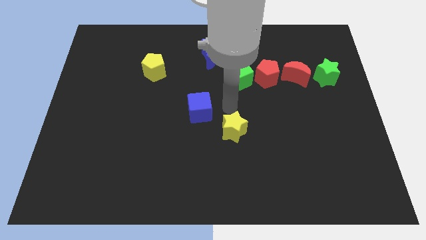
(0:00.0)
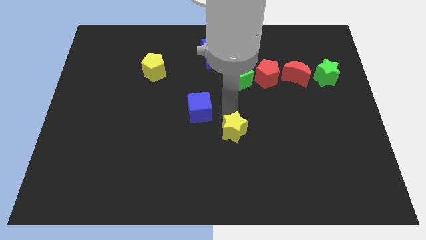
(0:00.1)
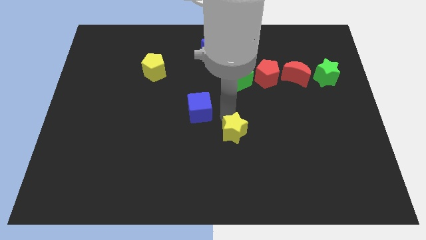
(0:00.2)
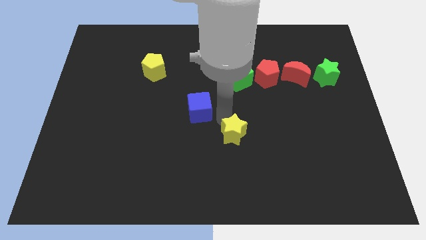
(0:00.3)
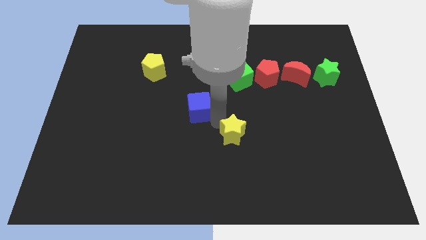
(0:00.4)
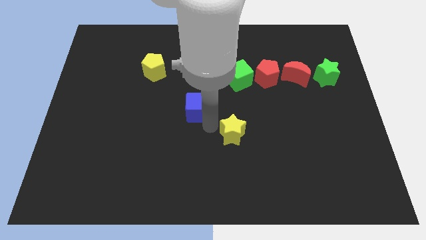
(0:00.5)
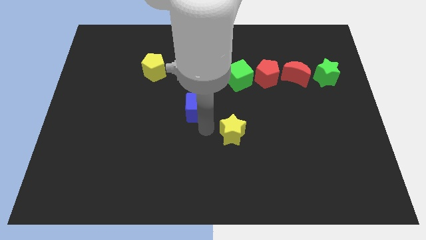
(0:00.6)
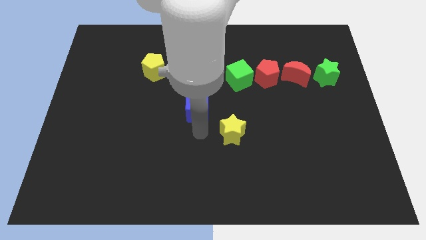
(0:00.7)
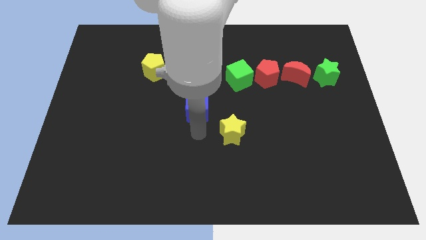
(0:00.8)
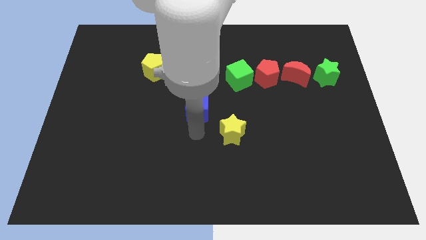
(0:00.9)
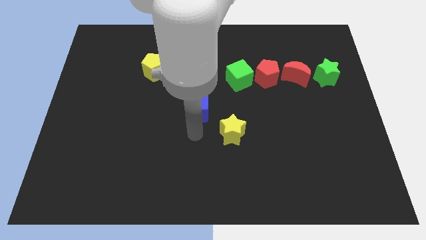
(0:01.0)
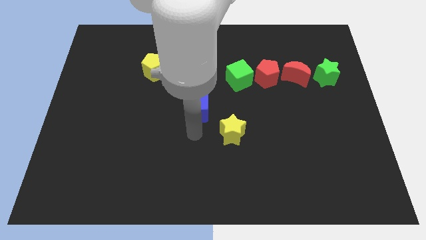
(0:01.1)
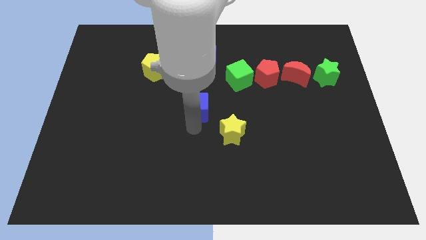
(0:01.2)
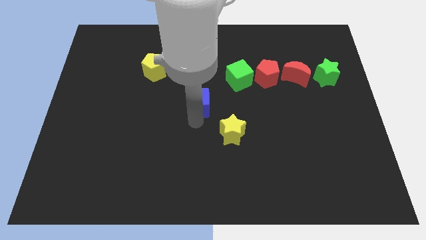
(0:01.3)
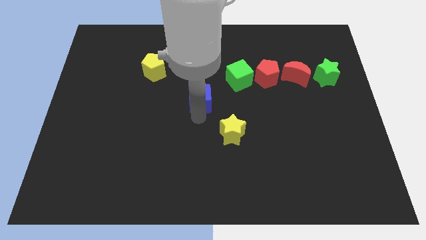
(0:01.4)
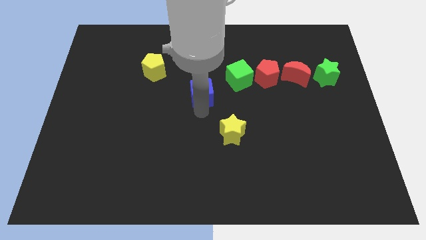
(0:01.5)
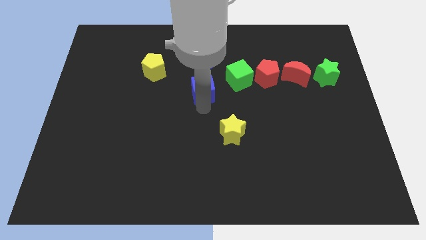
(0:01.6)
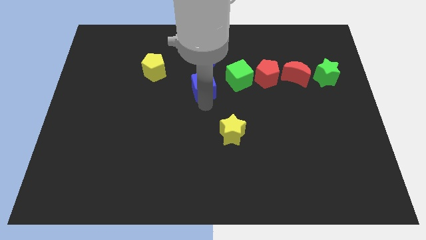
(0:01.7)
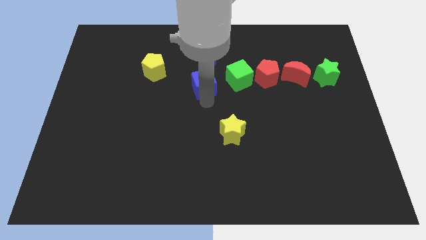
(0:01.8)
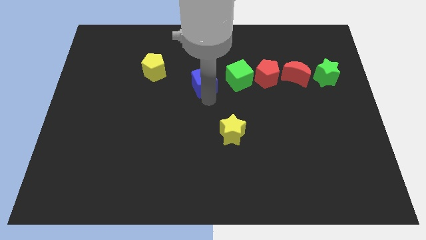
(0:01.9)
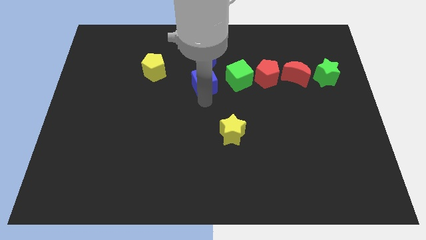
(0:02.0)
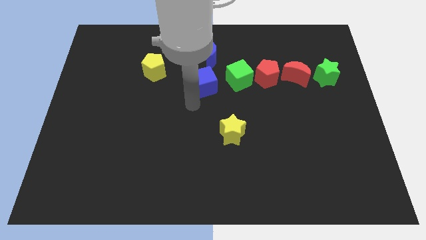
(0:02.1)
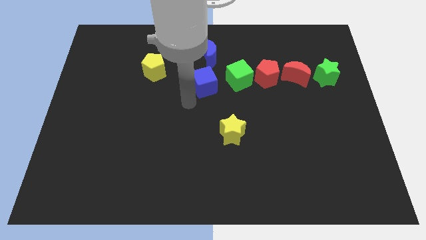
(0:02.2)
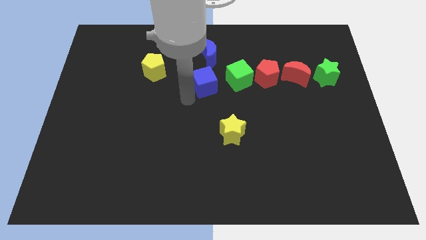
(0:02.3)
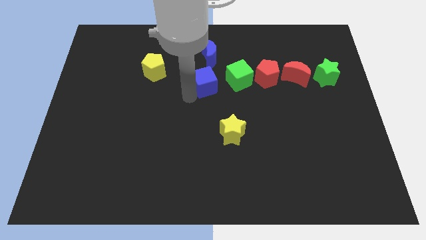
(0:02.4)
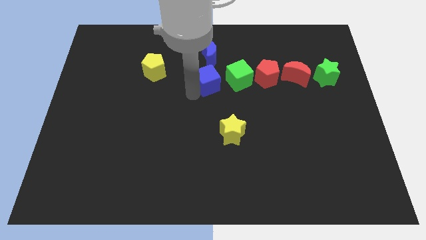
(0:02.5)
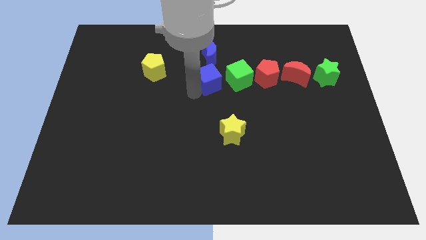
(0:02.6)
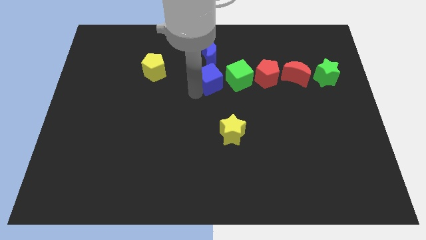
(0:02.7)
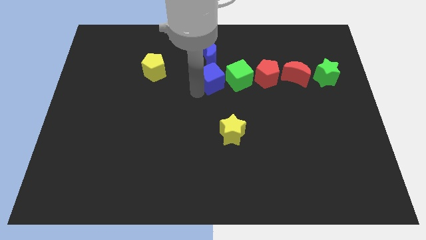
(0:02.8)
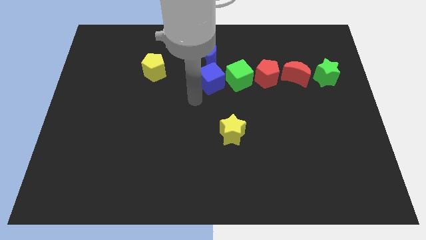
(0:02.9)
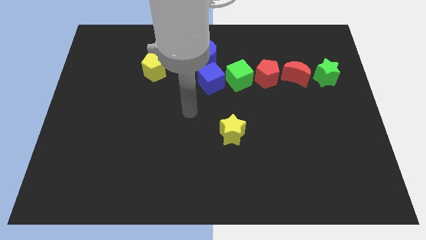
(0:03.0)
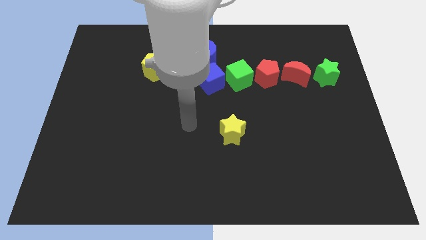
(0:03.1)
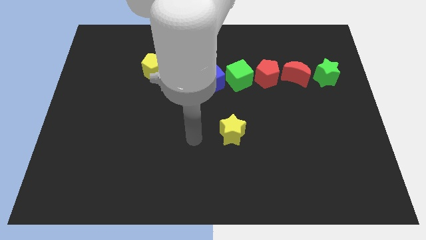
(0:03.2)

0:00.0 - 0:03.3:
push the blue cube to the left side of the green cube

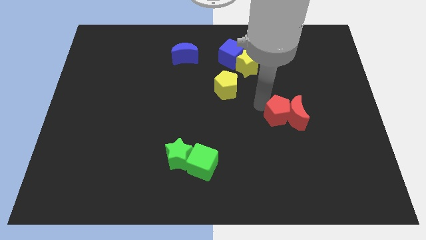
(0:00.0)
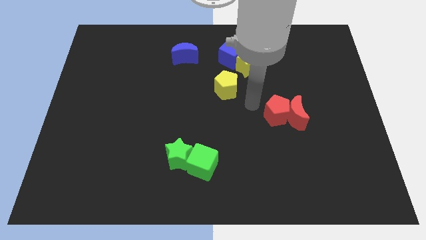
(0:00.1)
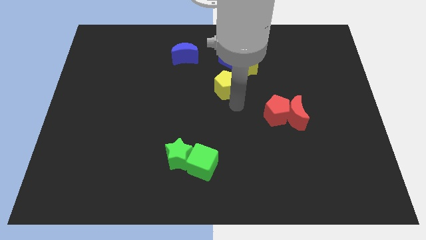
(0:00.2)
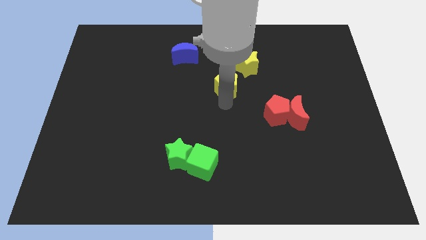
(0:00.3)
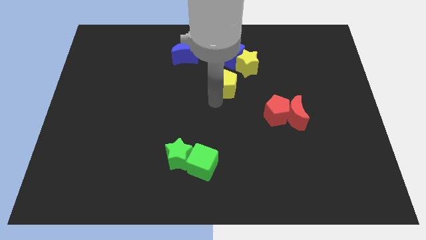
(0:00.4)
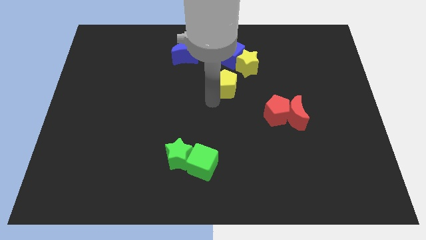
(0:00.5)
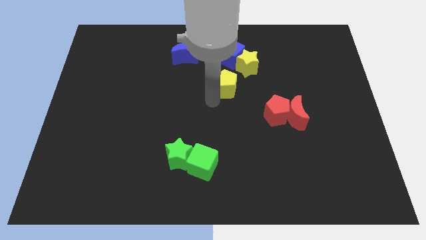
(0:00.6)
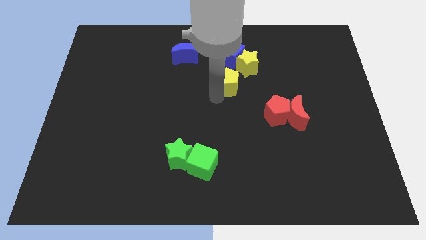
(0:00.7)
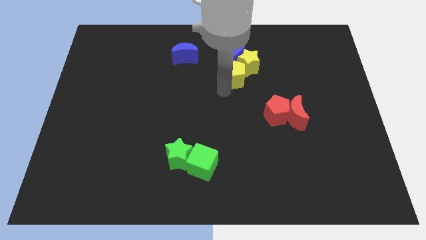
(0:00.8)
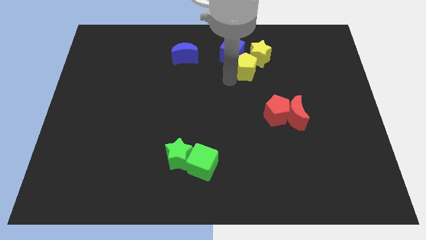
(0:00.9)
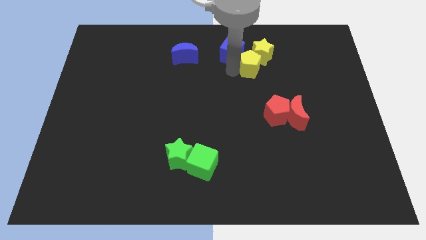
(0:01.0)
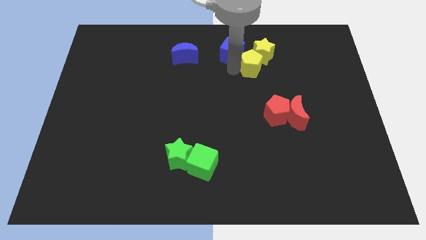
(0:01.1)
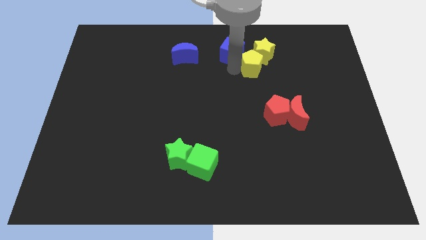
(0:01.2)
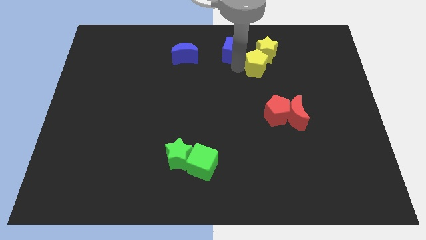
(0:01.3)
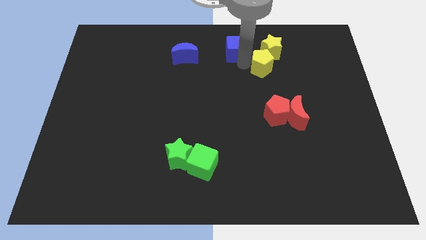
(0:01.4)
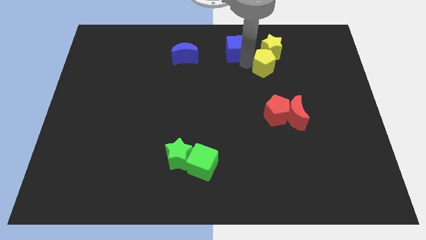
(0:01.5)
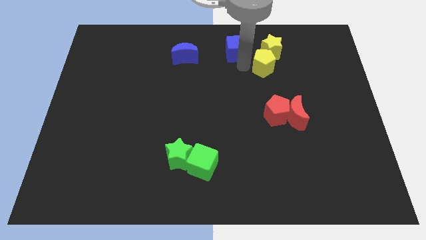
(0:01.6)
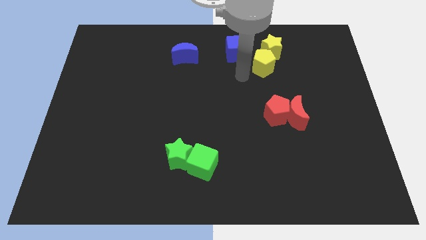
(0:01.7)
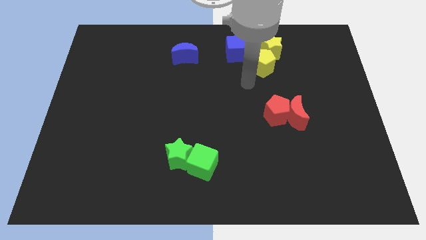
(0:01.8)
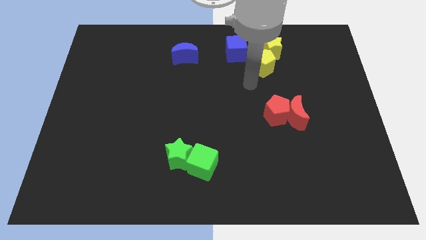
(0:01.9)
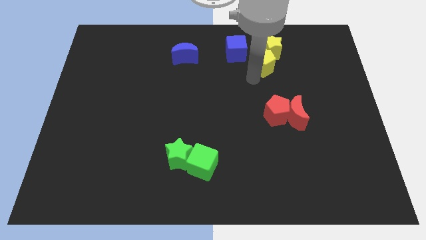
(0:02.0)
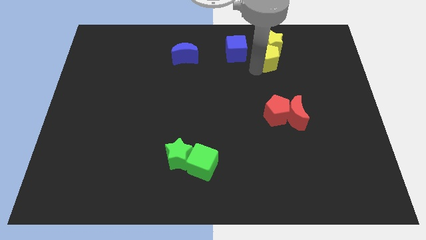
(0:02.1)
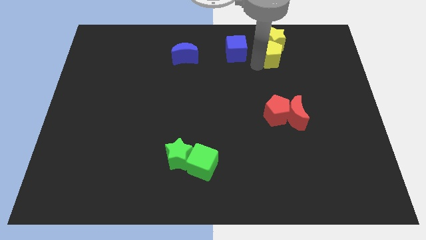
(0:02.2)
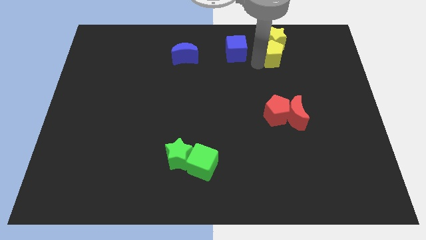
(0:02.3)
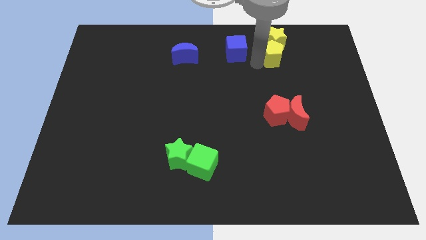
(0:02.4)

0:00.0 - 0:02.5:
move the yellow pentagon along with the yellow star to the right of the blue cube

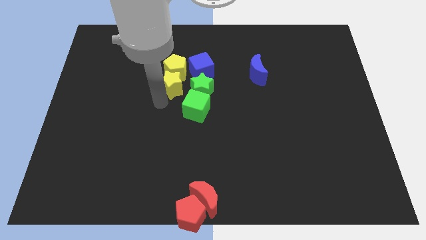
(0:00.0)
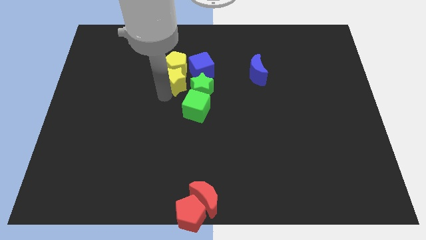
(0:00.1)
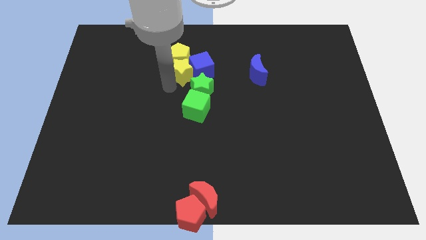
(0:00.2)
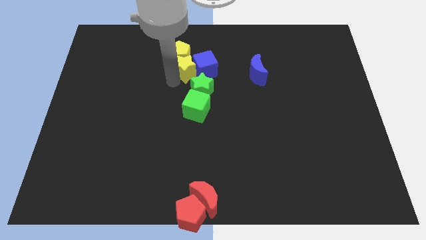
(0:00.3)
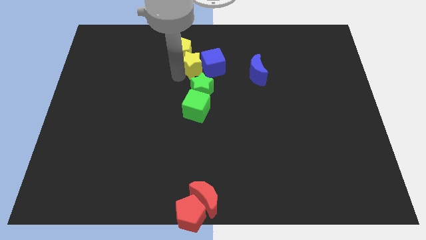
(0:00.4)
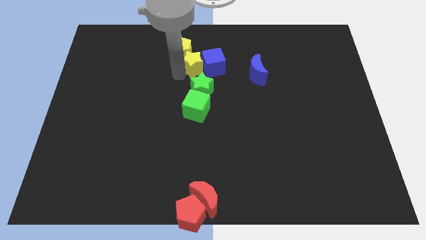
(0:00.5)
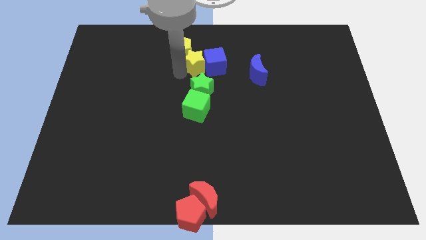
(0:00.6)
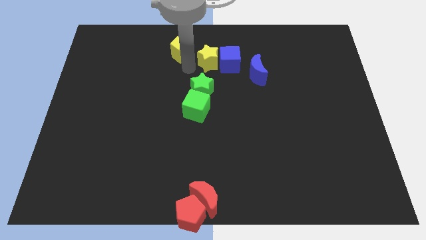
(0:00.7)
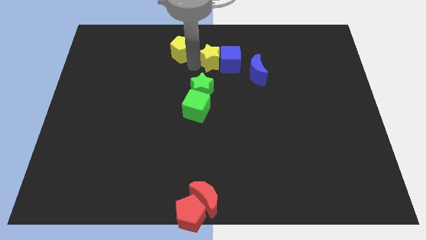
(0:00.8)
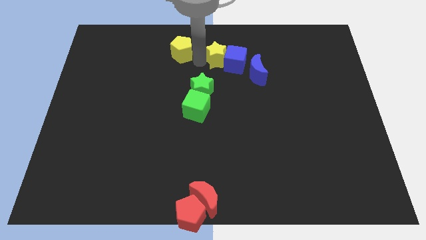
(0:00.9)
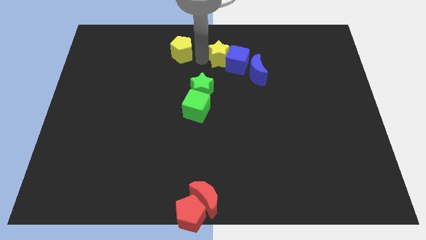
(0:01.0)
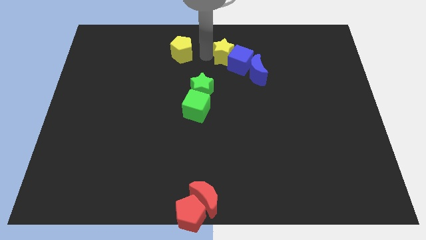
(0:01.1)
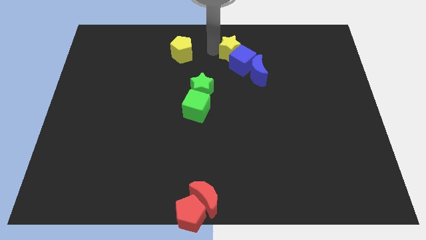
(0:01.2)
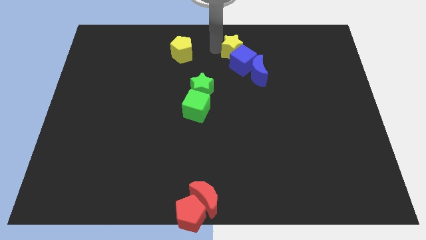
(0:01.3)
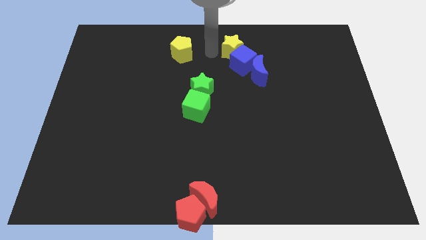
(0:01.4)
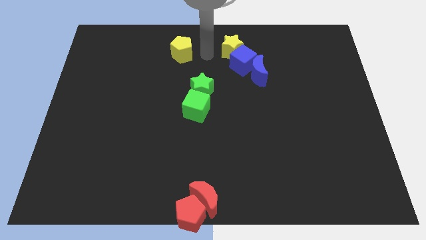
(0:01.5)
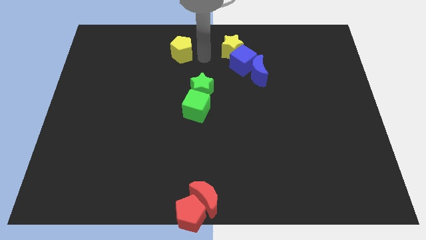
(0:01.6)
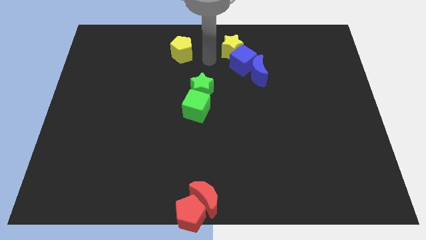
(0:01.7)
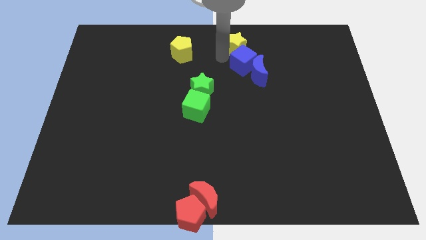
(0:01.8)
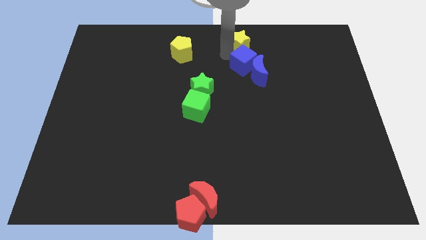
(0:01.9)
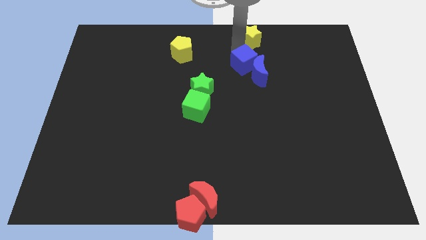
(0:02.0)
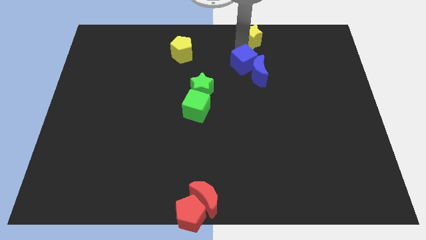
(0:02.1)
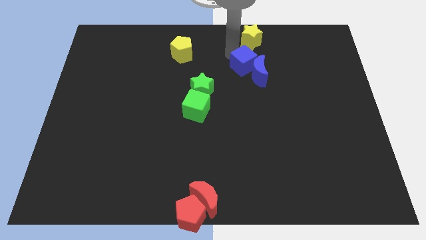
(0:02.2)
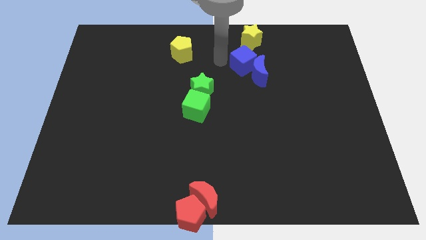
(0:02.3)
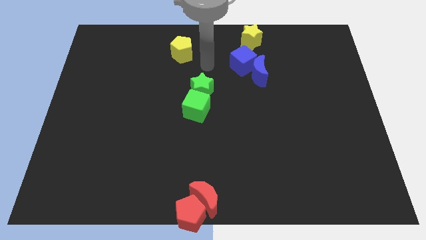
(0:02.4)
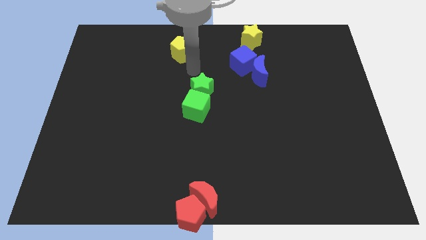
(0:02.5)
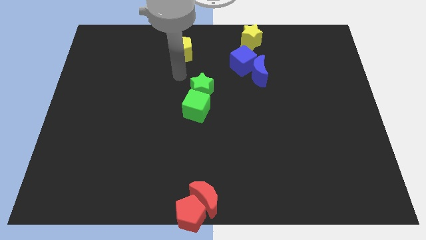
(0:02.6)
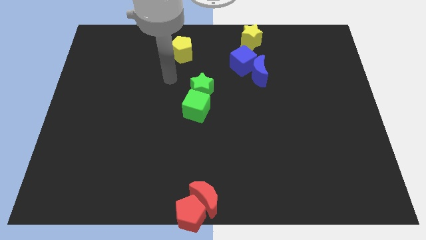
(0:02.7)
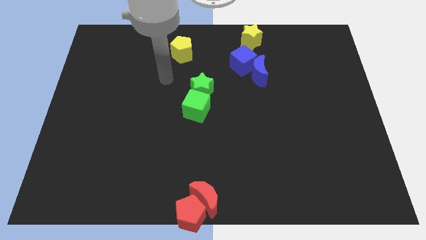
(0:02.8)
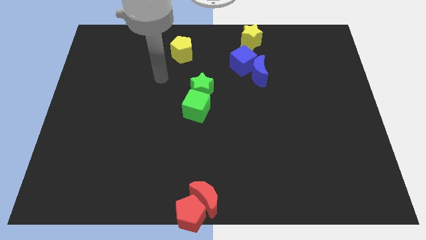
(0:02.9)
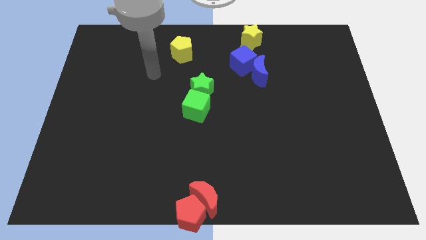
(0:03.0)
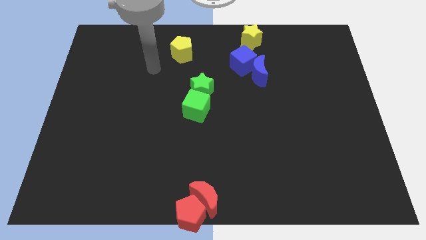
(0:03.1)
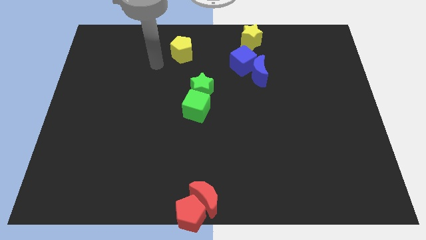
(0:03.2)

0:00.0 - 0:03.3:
push the yellow star to the top side of the blue cube

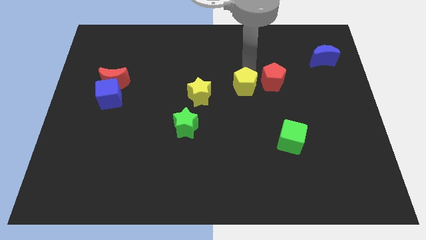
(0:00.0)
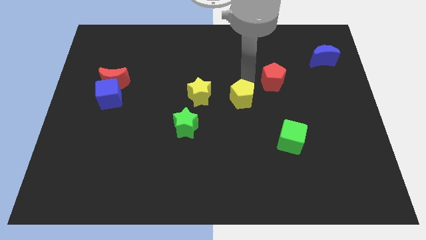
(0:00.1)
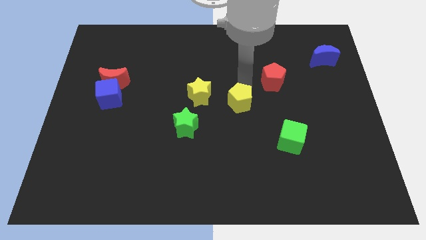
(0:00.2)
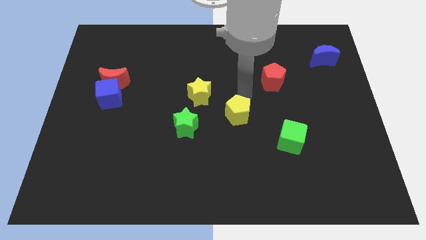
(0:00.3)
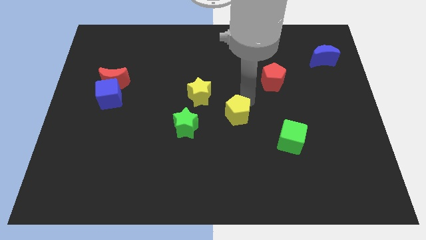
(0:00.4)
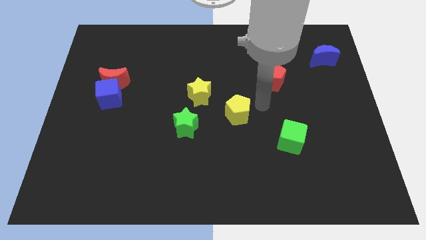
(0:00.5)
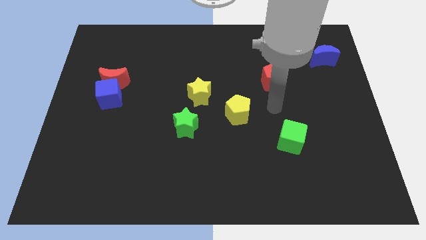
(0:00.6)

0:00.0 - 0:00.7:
push the yellow pentagon towards the bottom of the board
